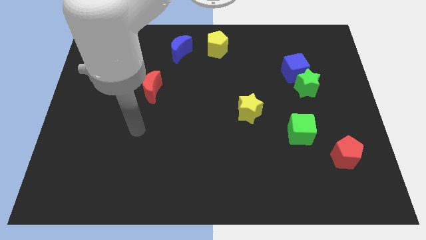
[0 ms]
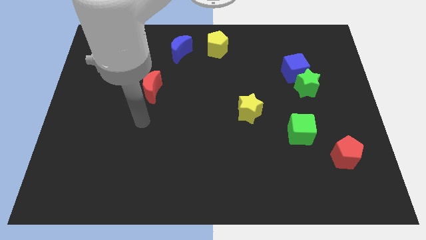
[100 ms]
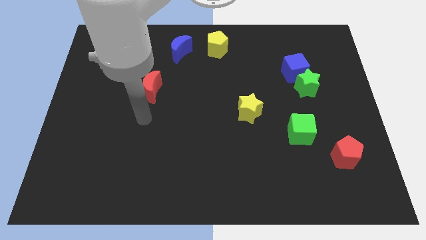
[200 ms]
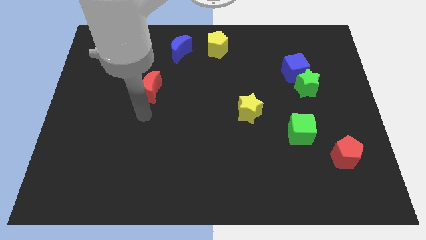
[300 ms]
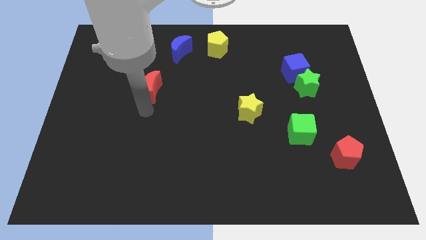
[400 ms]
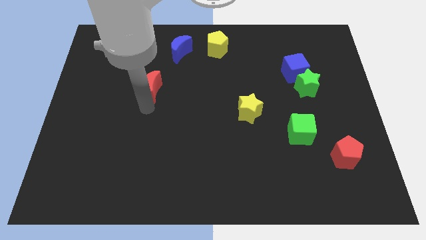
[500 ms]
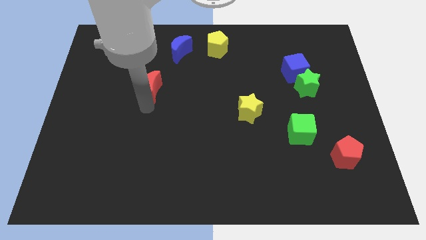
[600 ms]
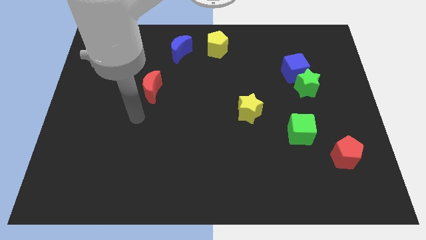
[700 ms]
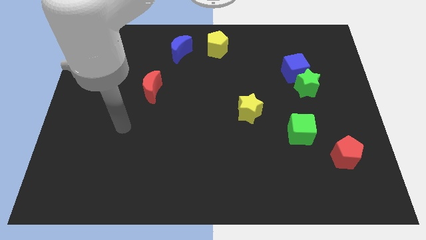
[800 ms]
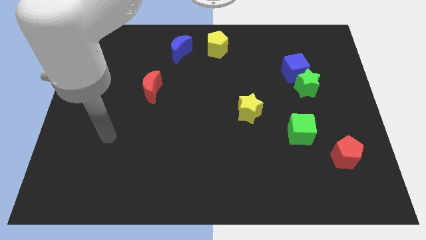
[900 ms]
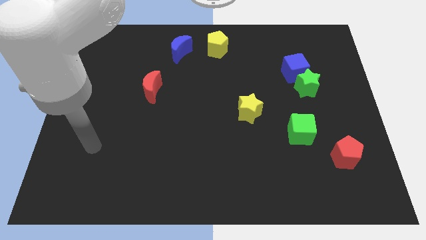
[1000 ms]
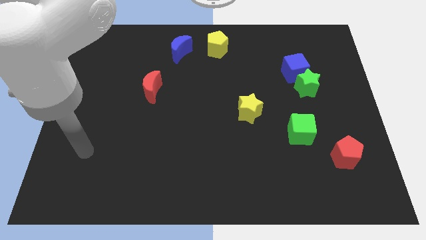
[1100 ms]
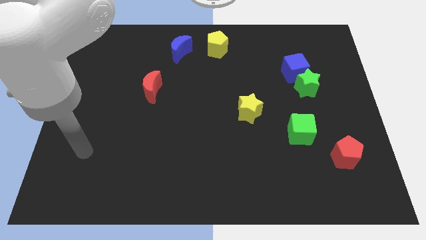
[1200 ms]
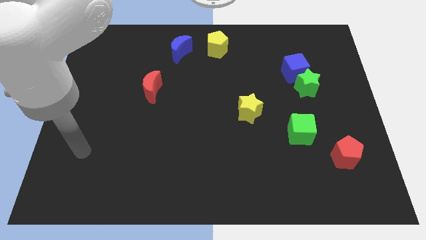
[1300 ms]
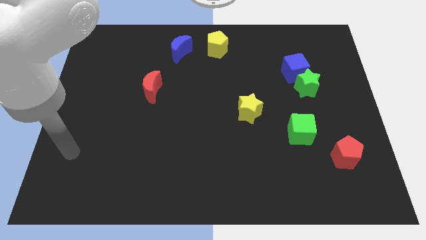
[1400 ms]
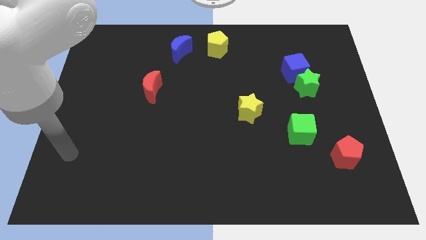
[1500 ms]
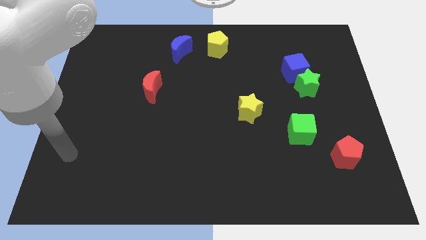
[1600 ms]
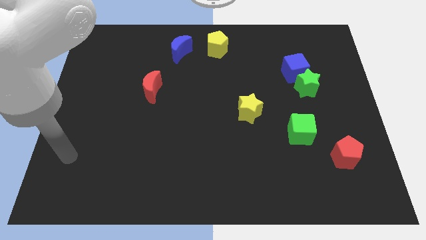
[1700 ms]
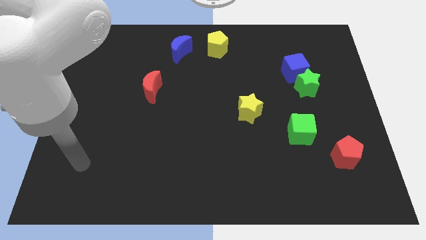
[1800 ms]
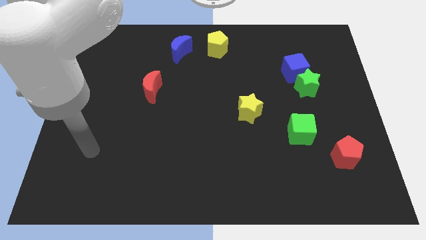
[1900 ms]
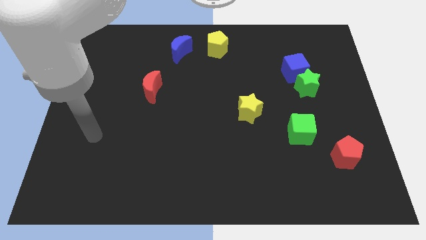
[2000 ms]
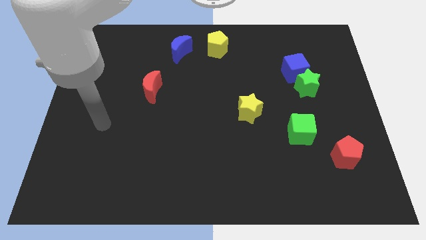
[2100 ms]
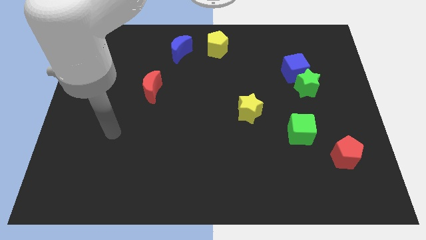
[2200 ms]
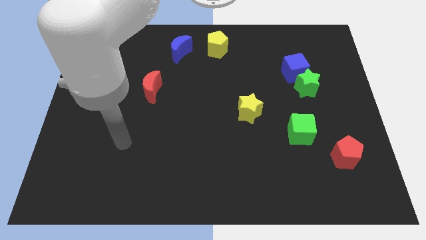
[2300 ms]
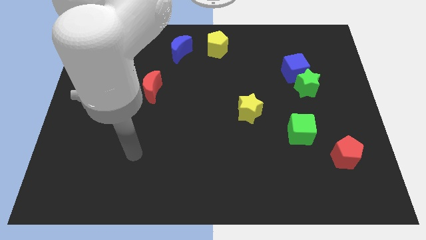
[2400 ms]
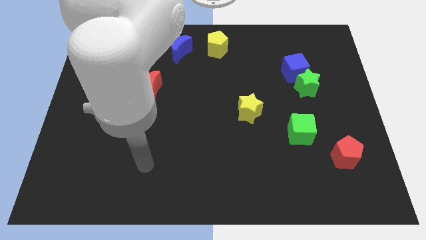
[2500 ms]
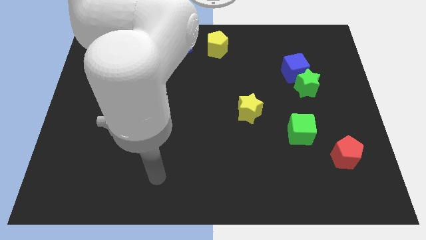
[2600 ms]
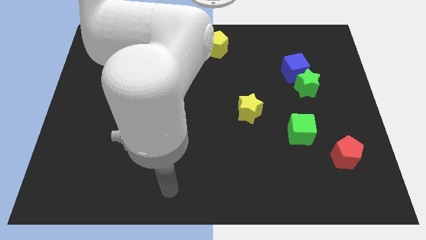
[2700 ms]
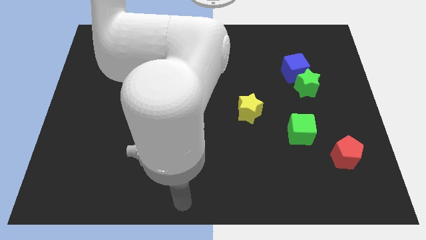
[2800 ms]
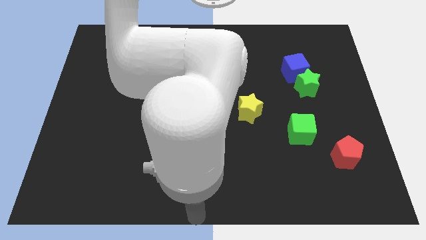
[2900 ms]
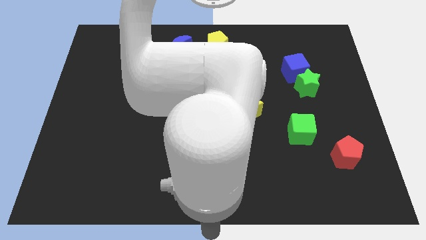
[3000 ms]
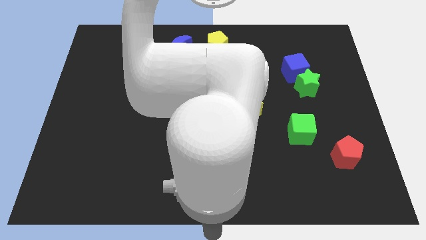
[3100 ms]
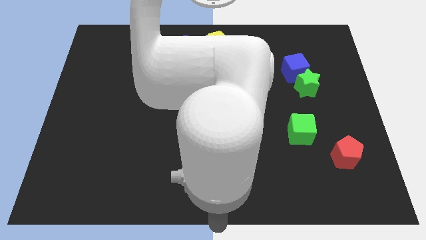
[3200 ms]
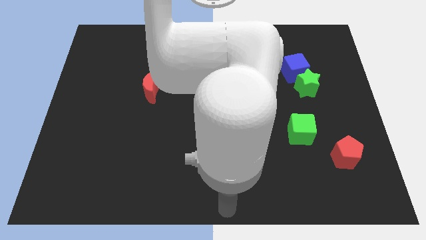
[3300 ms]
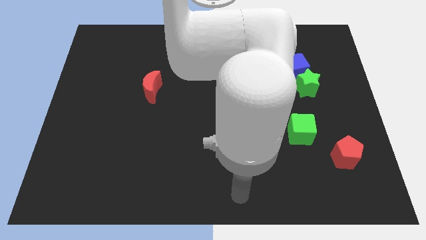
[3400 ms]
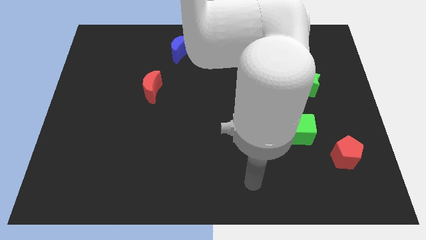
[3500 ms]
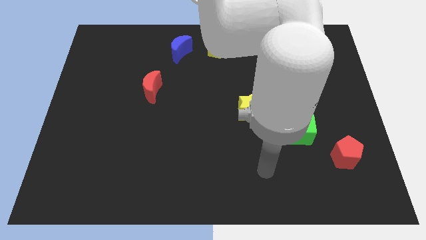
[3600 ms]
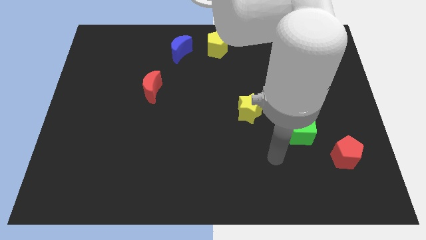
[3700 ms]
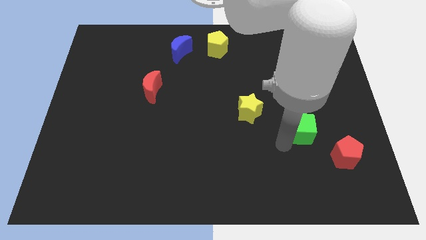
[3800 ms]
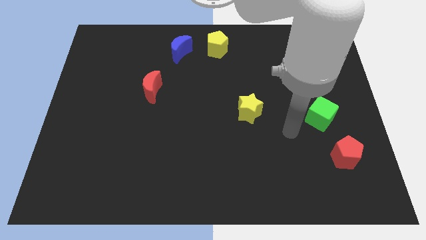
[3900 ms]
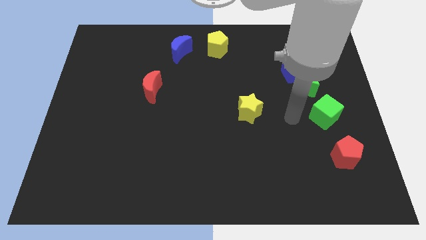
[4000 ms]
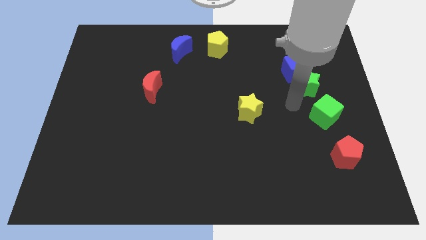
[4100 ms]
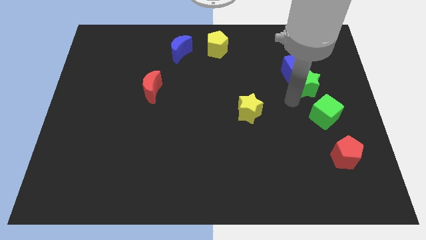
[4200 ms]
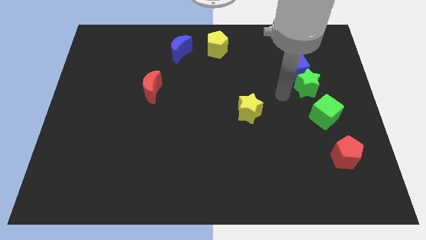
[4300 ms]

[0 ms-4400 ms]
move the green cube below the green star

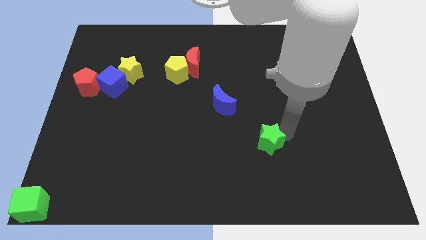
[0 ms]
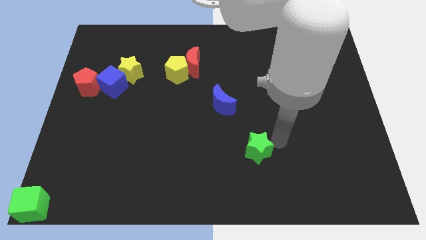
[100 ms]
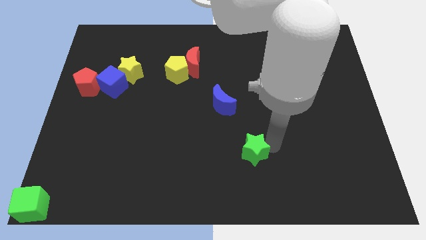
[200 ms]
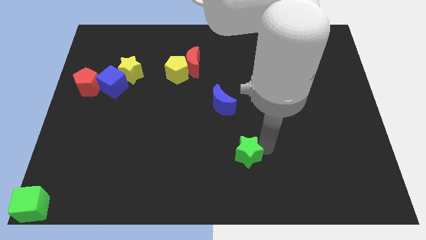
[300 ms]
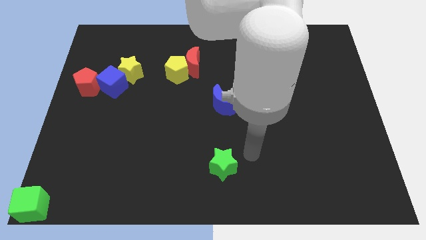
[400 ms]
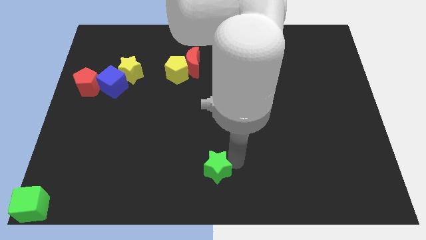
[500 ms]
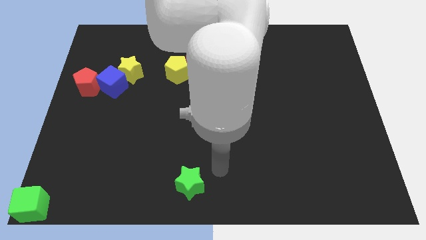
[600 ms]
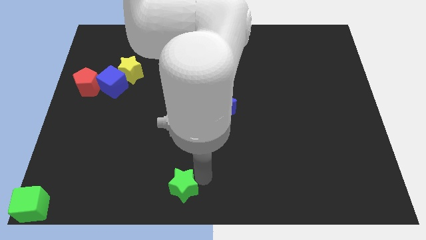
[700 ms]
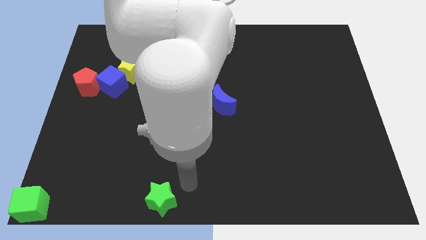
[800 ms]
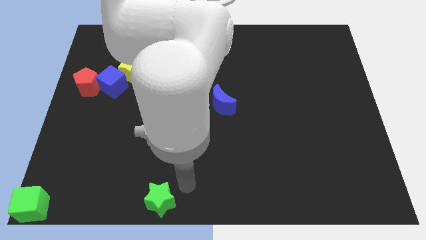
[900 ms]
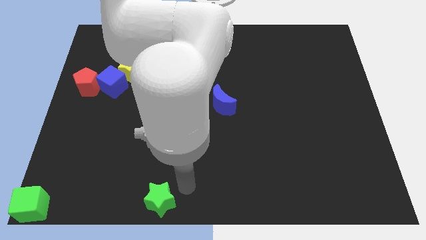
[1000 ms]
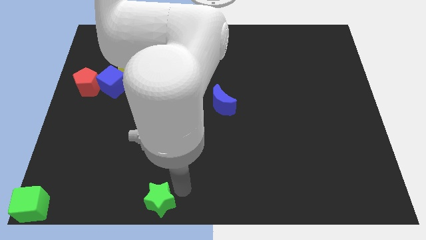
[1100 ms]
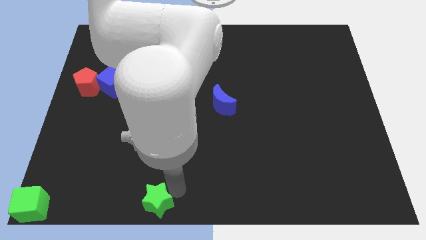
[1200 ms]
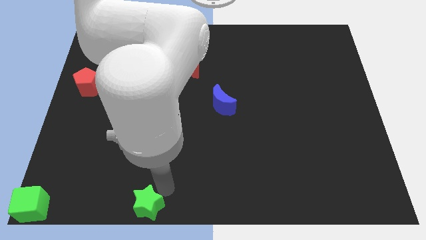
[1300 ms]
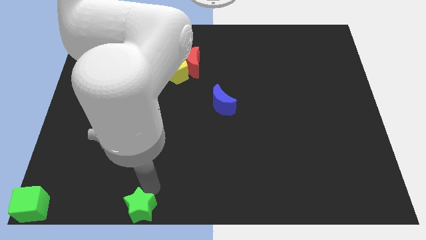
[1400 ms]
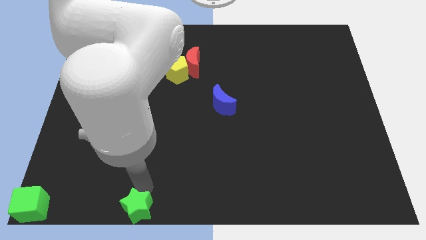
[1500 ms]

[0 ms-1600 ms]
push the green star towards the bottom left of the board

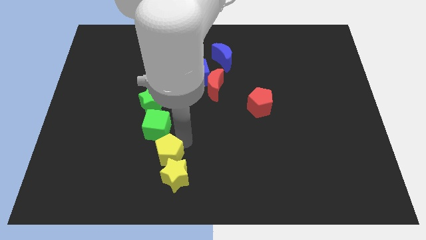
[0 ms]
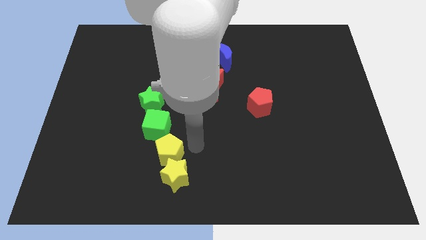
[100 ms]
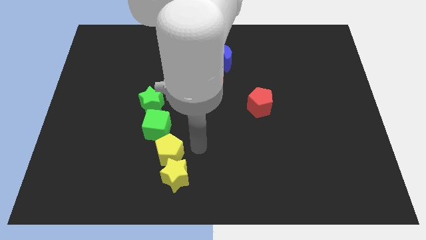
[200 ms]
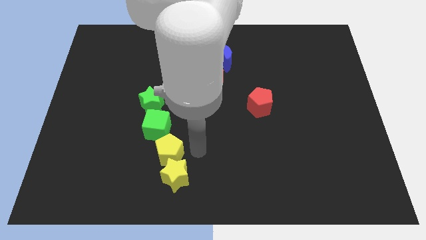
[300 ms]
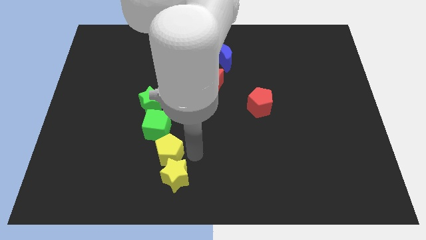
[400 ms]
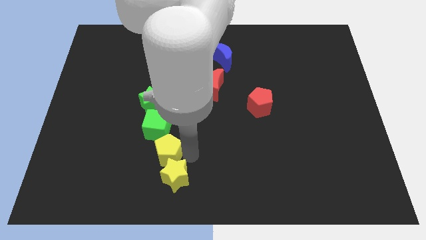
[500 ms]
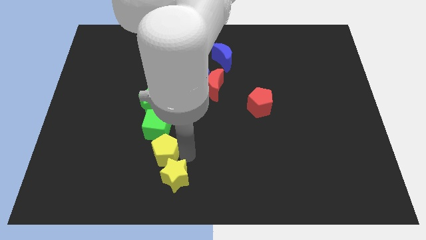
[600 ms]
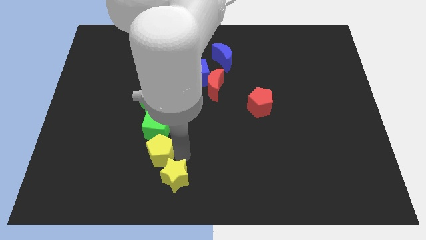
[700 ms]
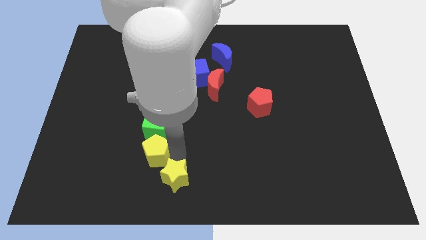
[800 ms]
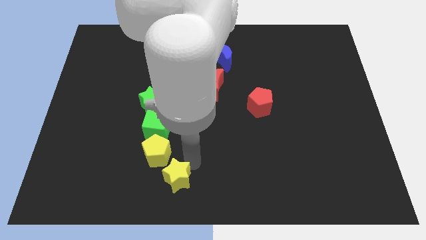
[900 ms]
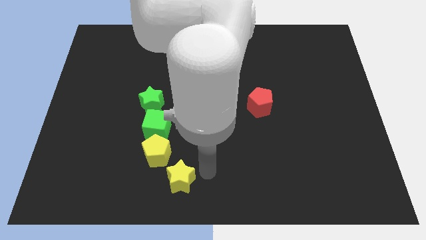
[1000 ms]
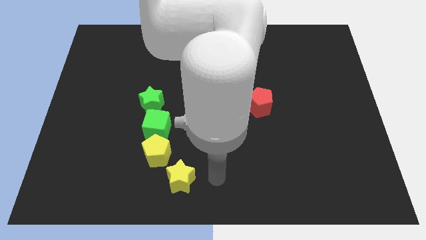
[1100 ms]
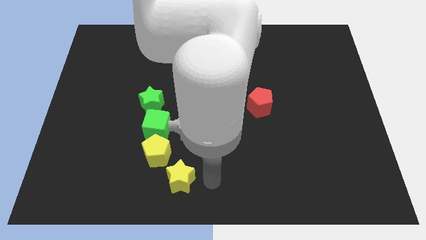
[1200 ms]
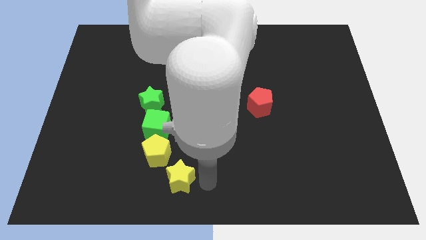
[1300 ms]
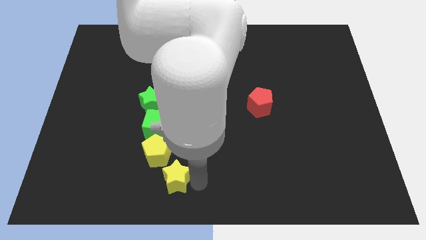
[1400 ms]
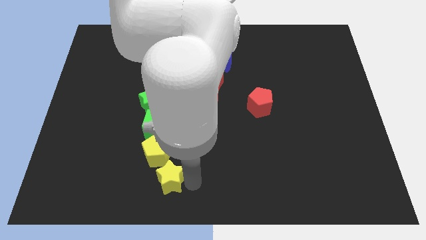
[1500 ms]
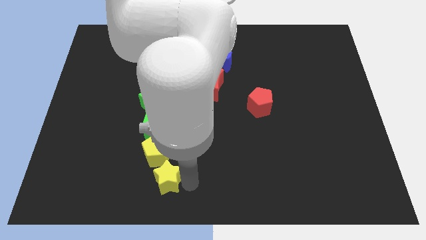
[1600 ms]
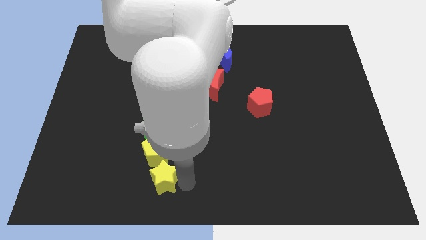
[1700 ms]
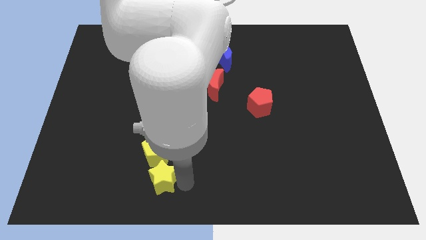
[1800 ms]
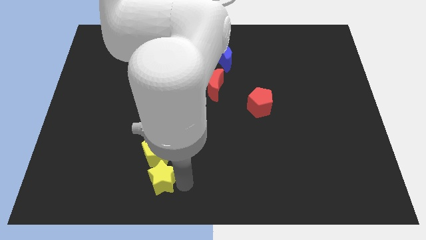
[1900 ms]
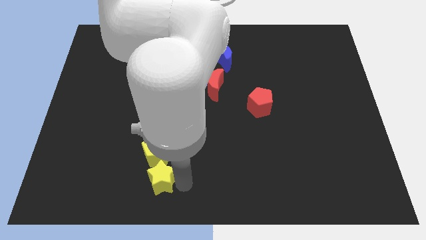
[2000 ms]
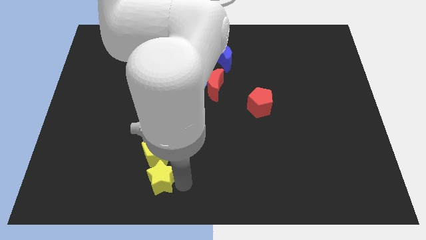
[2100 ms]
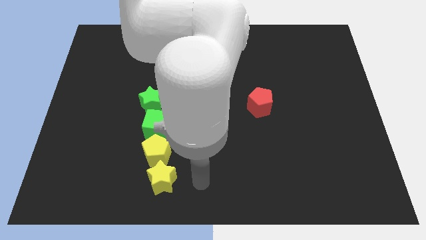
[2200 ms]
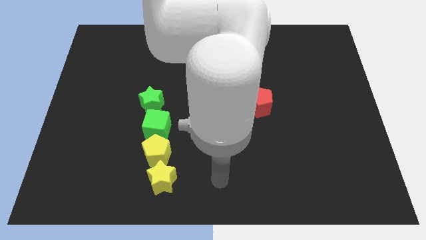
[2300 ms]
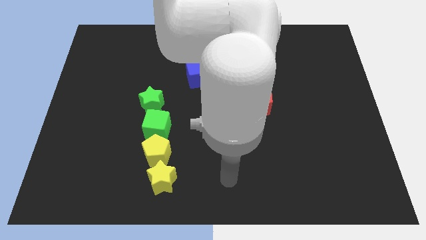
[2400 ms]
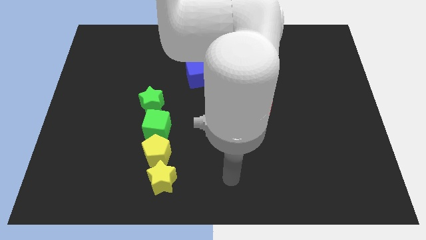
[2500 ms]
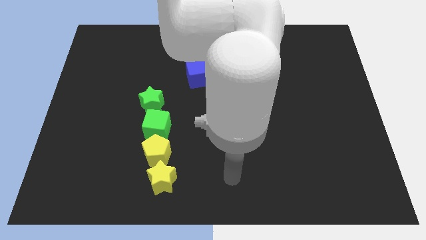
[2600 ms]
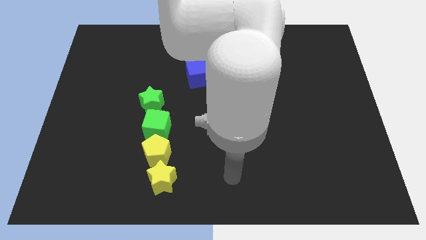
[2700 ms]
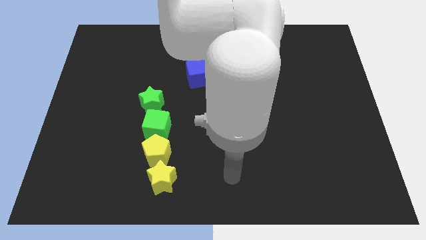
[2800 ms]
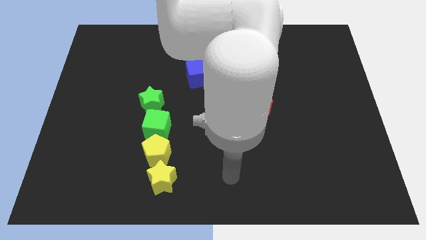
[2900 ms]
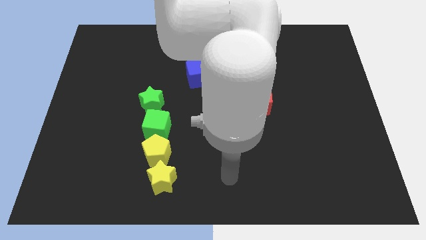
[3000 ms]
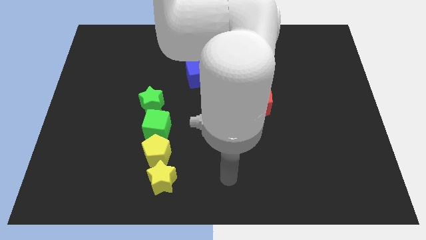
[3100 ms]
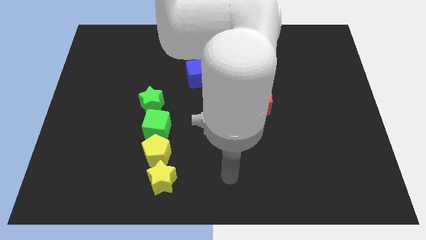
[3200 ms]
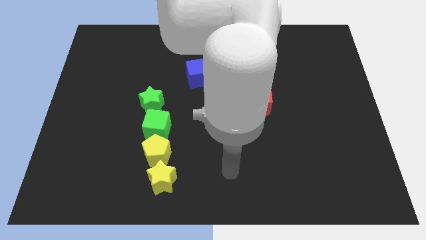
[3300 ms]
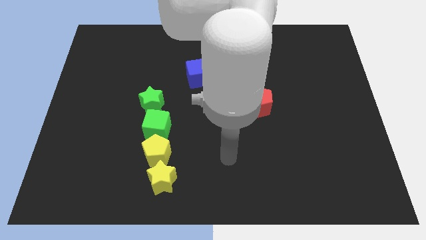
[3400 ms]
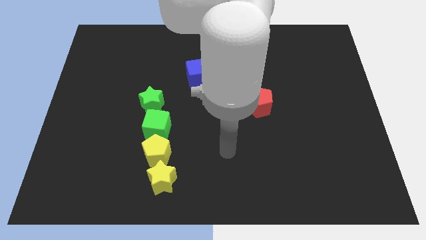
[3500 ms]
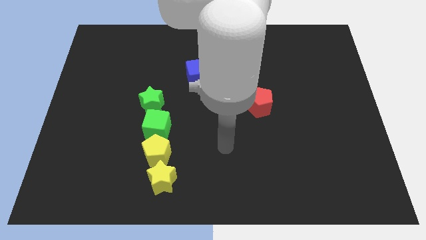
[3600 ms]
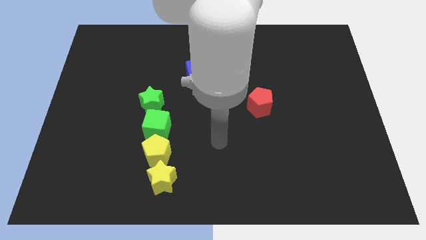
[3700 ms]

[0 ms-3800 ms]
place the yellow star exactly below the yellow pentagon
